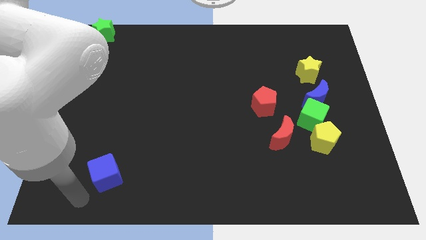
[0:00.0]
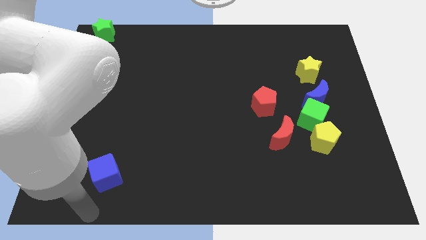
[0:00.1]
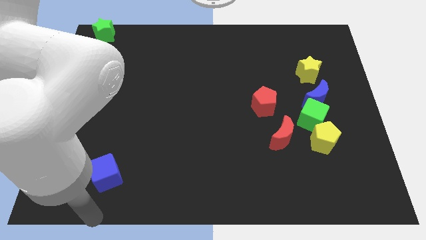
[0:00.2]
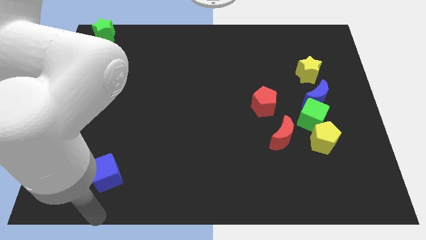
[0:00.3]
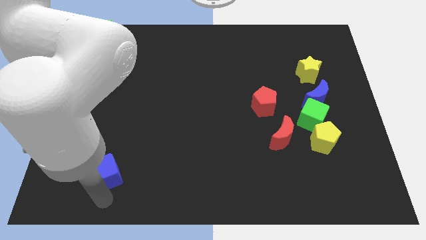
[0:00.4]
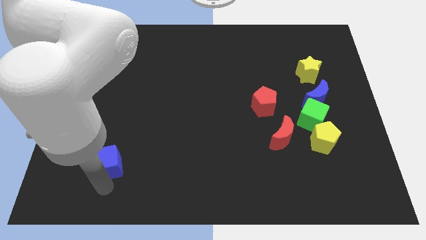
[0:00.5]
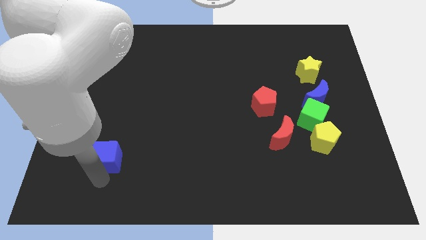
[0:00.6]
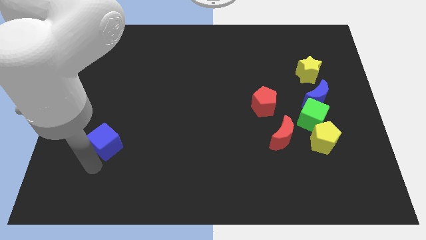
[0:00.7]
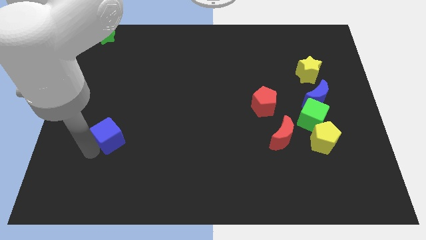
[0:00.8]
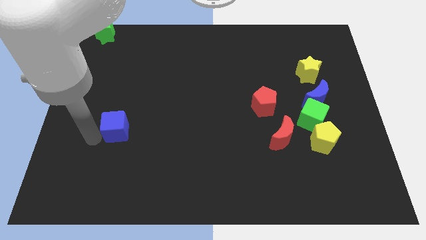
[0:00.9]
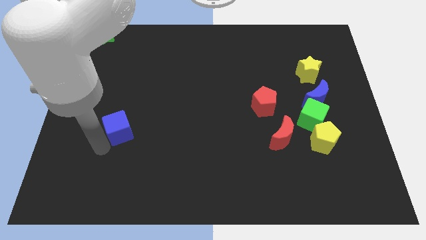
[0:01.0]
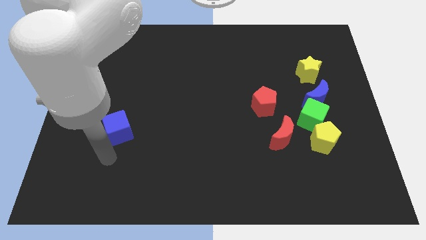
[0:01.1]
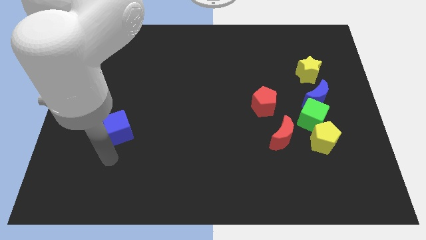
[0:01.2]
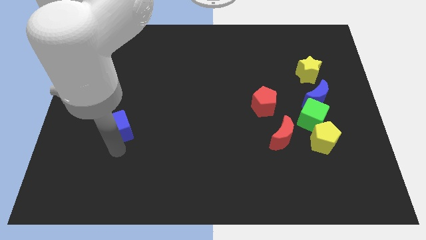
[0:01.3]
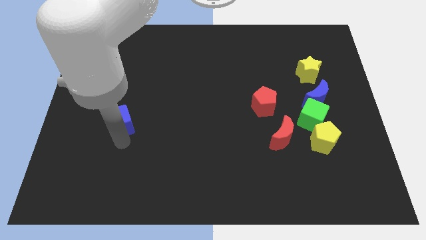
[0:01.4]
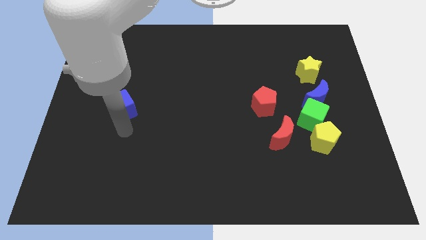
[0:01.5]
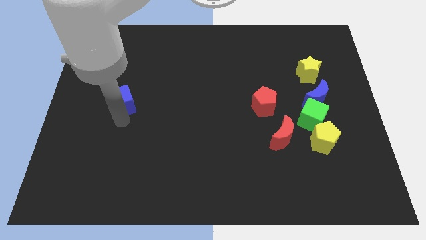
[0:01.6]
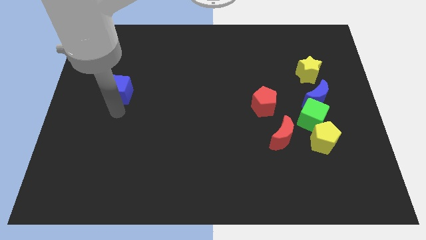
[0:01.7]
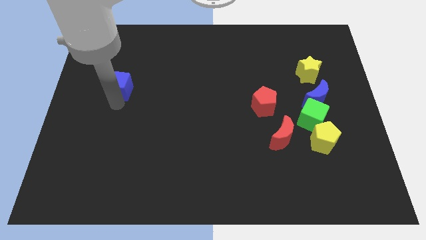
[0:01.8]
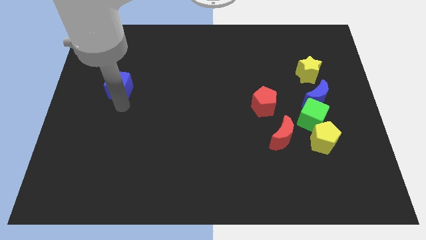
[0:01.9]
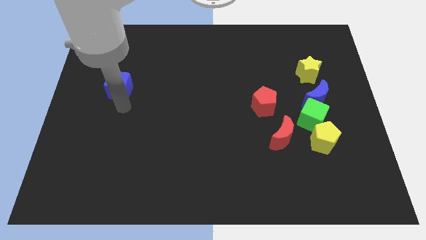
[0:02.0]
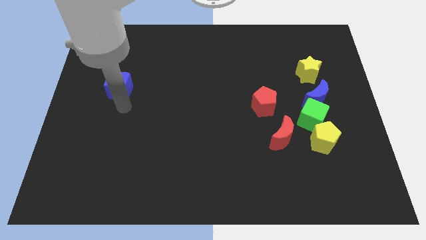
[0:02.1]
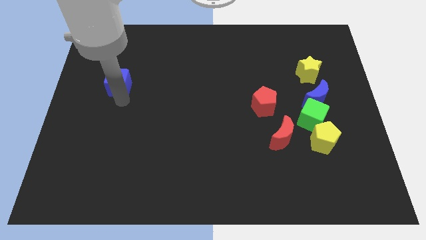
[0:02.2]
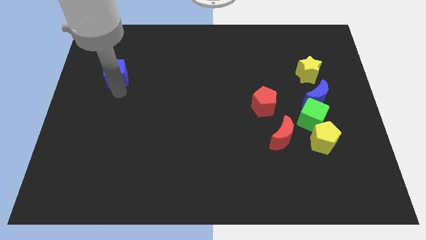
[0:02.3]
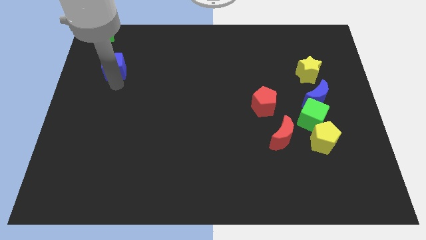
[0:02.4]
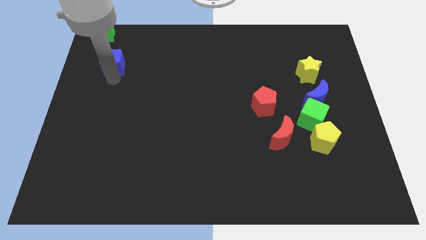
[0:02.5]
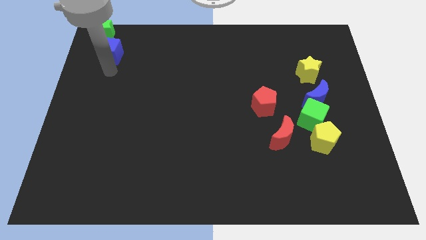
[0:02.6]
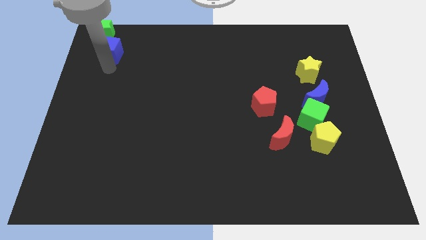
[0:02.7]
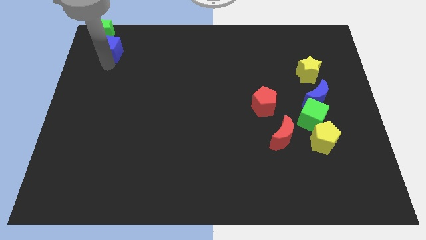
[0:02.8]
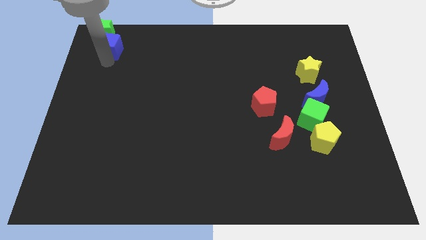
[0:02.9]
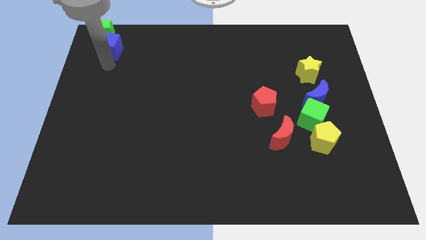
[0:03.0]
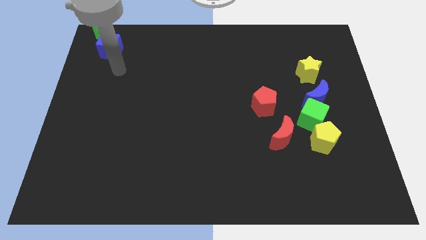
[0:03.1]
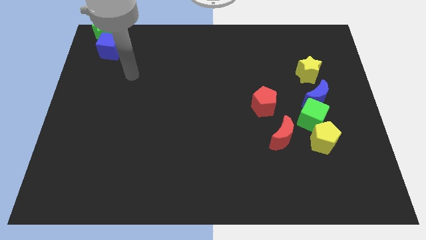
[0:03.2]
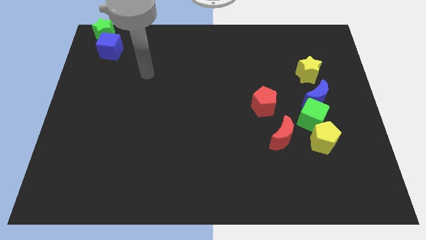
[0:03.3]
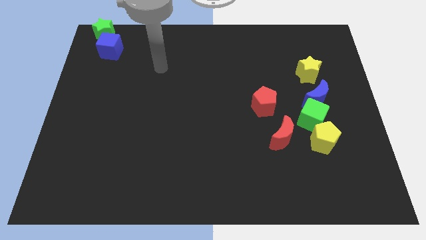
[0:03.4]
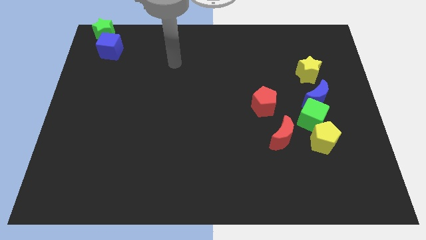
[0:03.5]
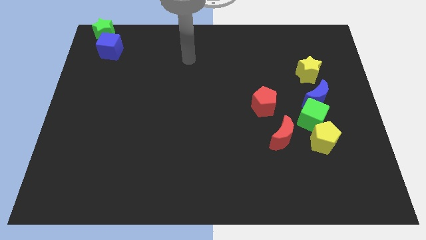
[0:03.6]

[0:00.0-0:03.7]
place the blue cube down to the green star

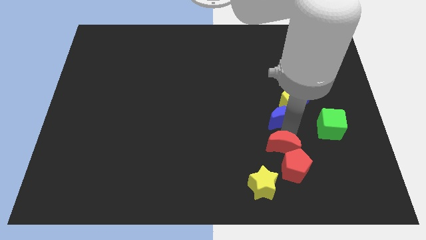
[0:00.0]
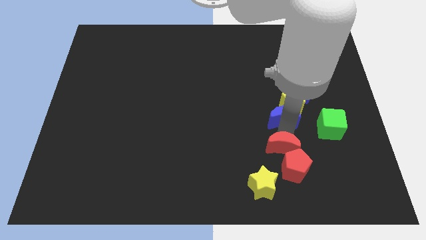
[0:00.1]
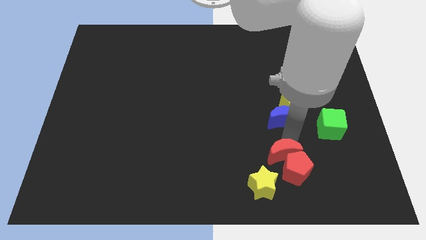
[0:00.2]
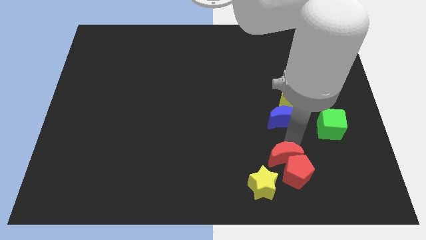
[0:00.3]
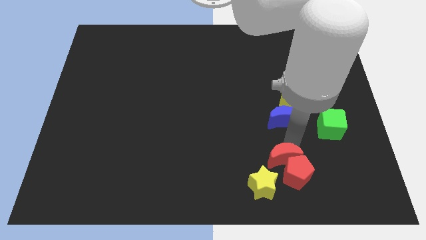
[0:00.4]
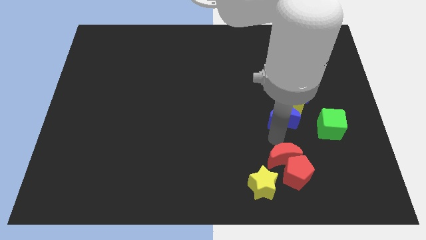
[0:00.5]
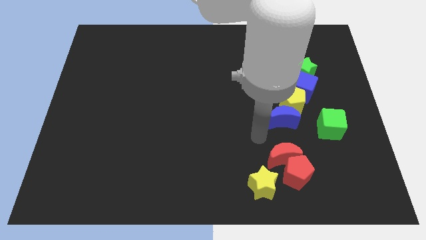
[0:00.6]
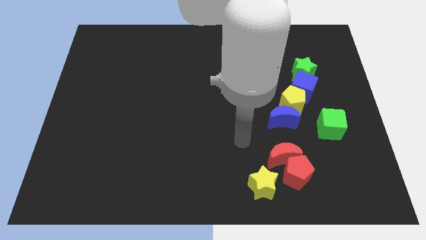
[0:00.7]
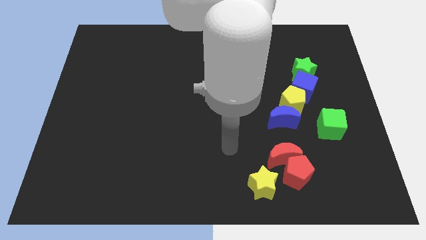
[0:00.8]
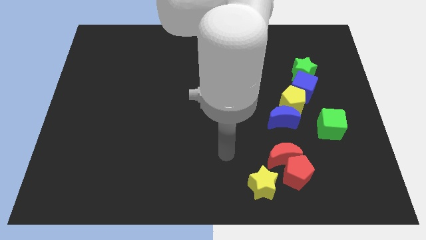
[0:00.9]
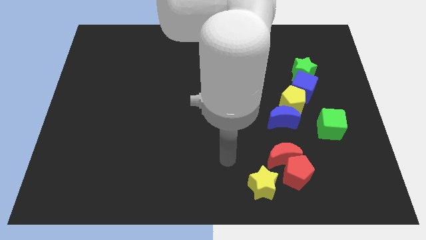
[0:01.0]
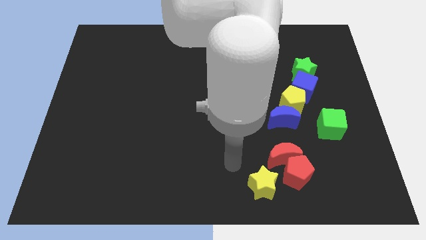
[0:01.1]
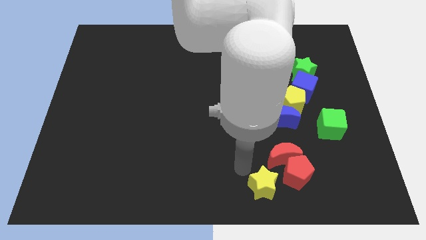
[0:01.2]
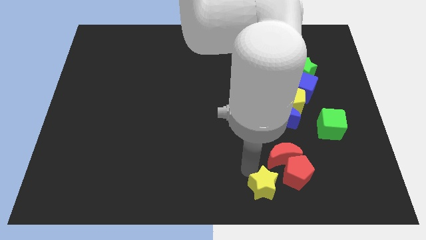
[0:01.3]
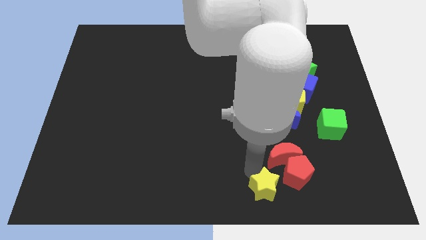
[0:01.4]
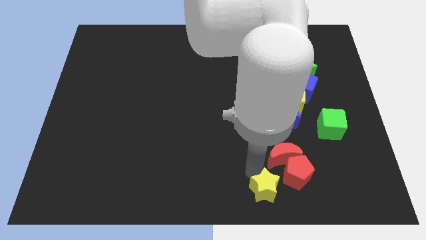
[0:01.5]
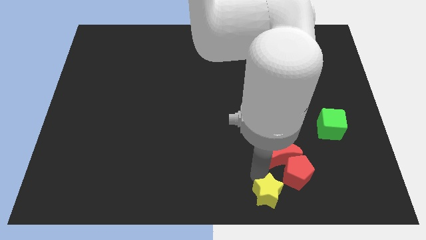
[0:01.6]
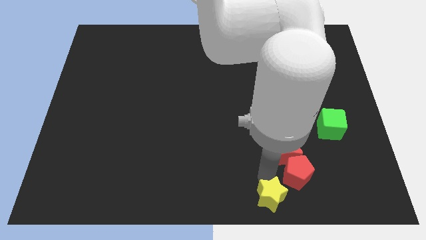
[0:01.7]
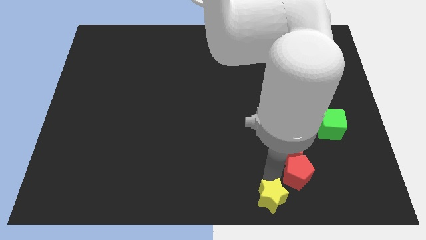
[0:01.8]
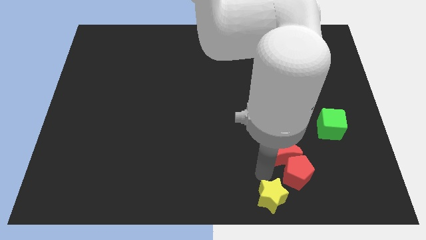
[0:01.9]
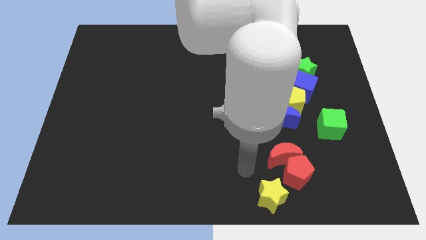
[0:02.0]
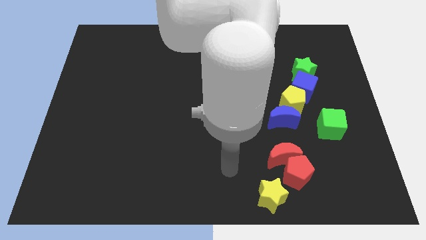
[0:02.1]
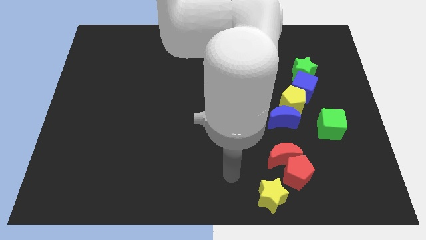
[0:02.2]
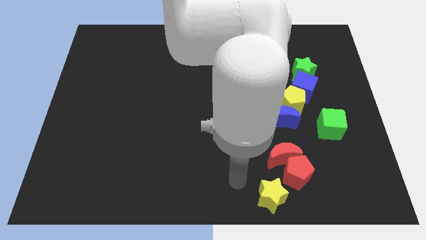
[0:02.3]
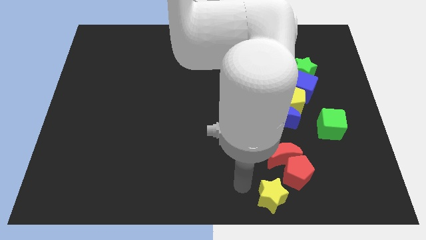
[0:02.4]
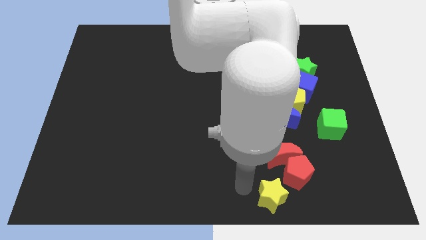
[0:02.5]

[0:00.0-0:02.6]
push the group of red blocks and yellow star slightly downwards

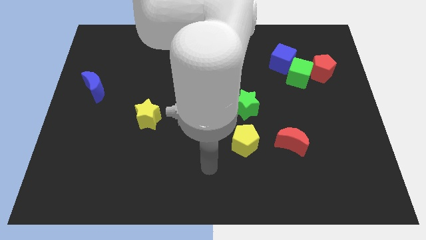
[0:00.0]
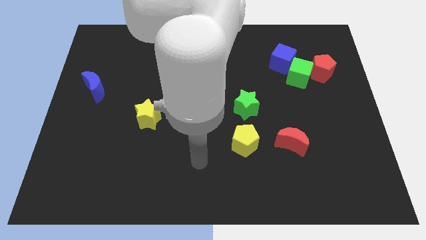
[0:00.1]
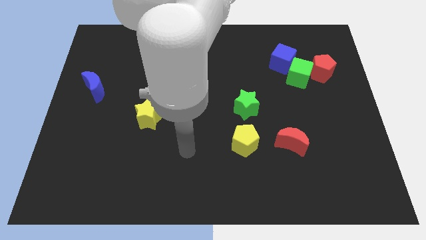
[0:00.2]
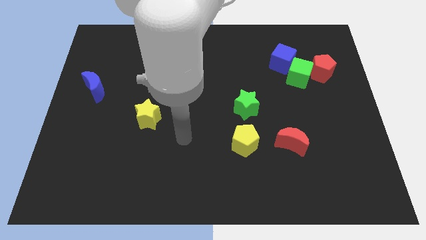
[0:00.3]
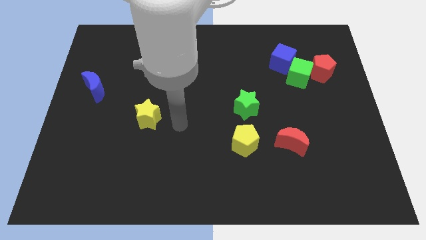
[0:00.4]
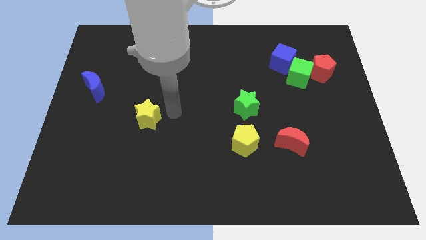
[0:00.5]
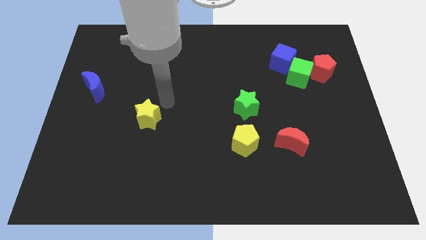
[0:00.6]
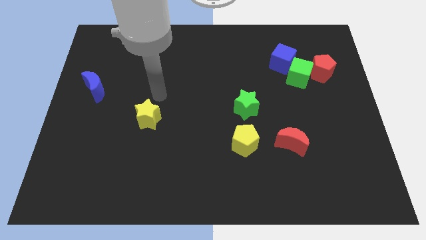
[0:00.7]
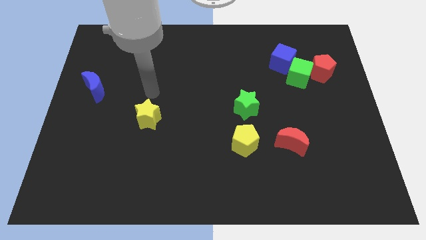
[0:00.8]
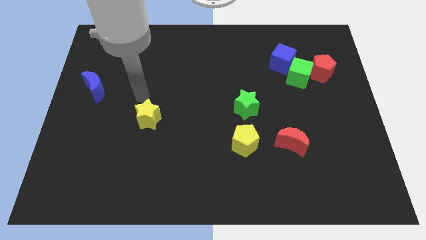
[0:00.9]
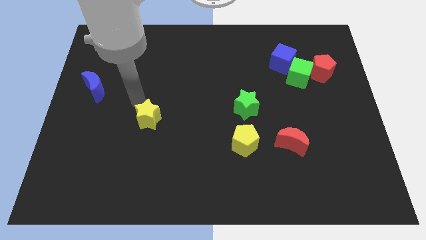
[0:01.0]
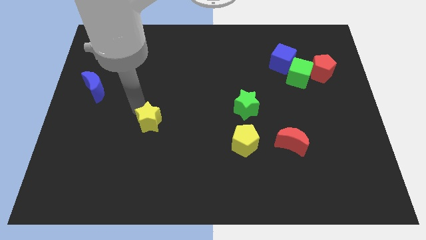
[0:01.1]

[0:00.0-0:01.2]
move arm towards the yellow star

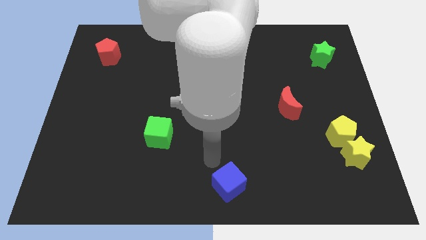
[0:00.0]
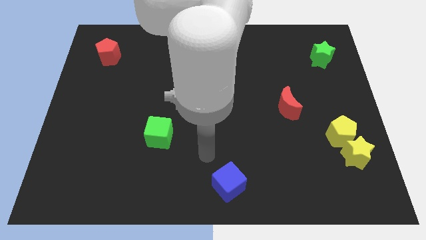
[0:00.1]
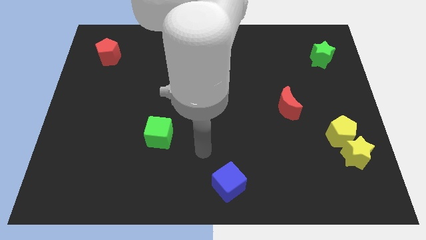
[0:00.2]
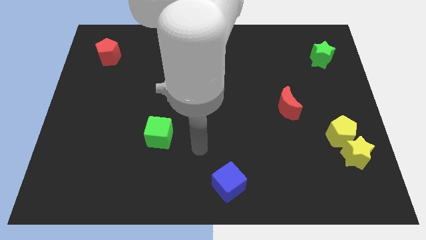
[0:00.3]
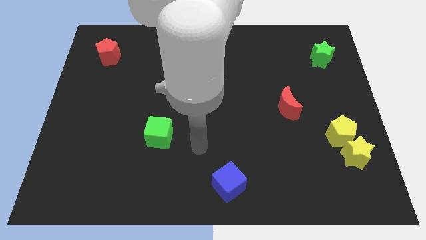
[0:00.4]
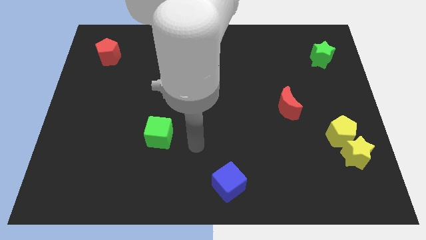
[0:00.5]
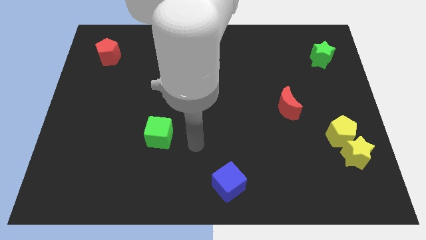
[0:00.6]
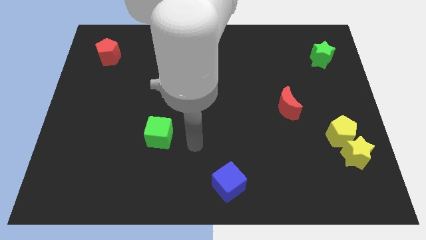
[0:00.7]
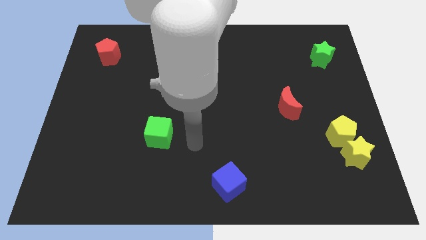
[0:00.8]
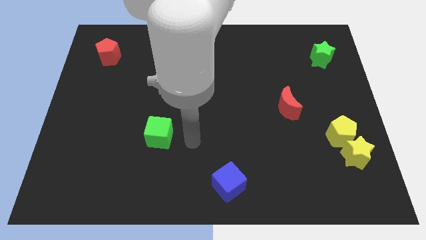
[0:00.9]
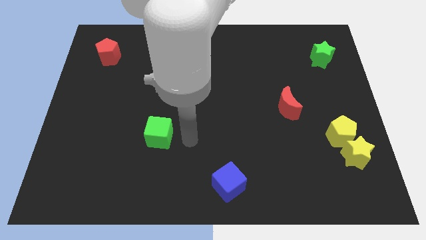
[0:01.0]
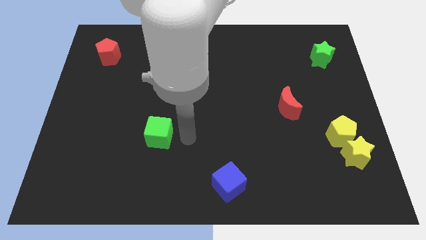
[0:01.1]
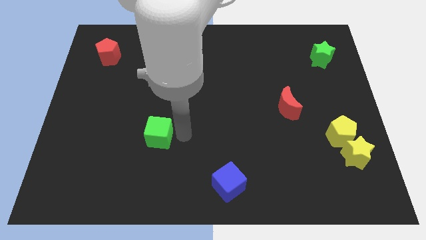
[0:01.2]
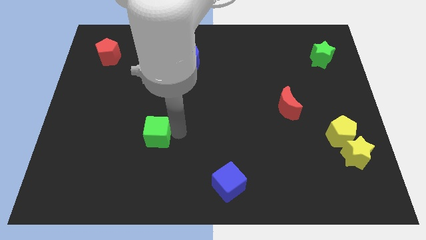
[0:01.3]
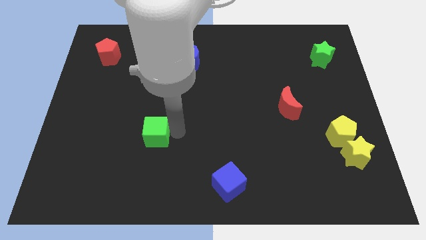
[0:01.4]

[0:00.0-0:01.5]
tap the green cube

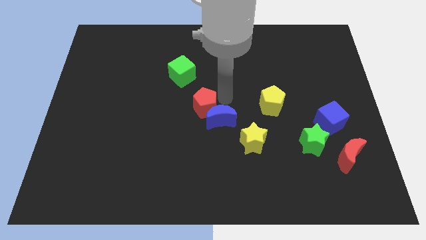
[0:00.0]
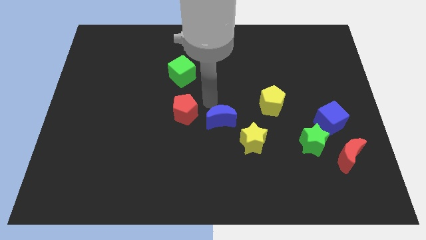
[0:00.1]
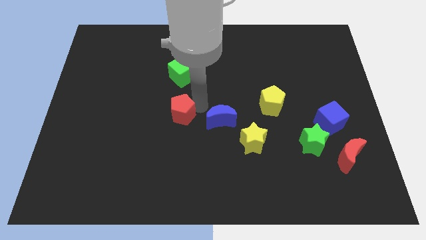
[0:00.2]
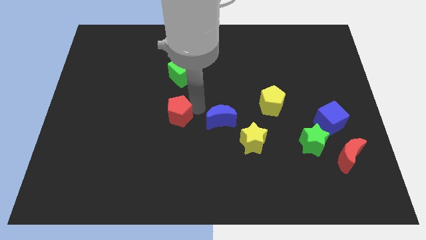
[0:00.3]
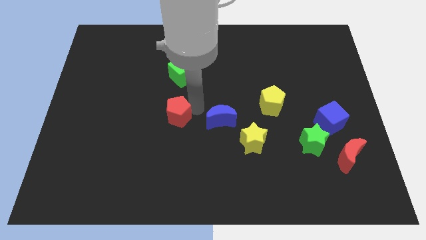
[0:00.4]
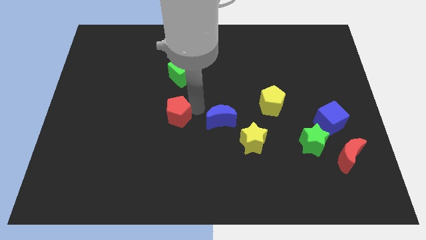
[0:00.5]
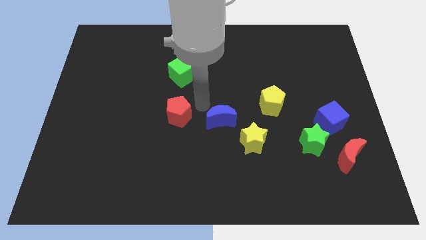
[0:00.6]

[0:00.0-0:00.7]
move the red pentagon to the left of the blue crescent on the board
